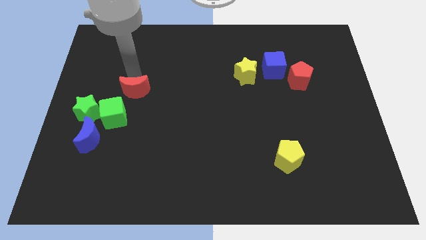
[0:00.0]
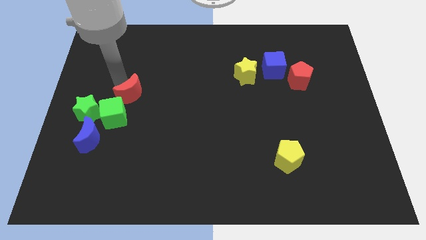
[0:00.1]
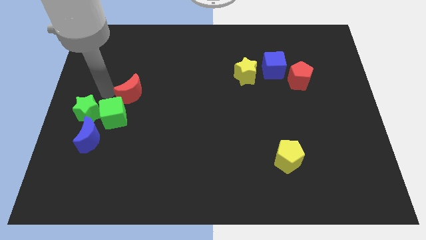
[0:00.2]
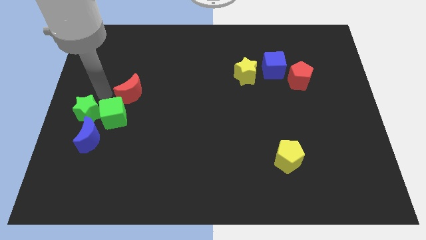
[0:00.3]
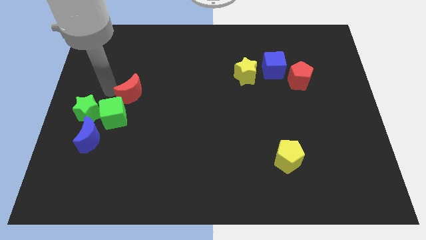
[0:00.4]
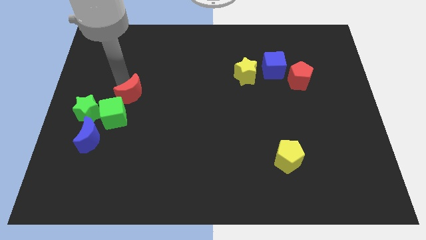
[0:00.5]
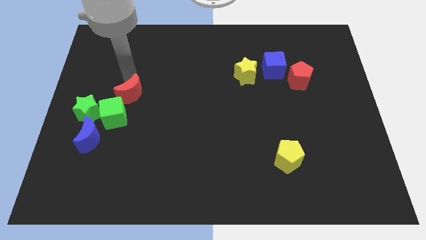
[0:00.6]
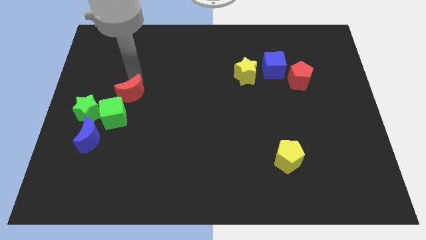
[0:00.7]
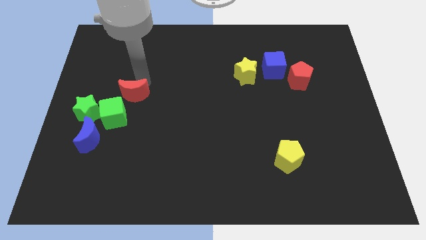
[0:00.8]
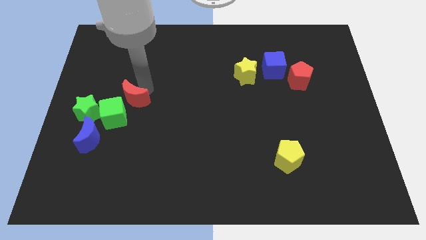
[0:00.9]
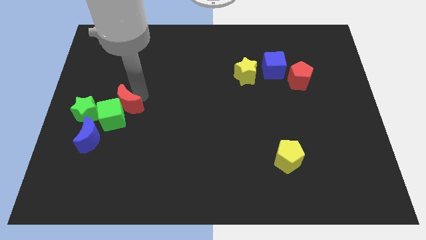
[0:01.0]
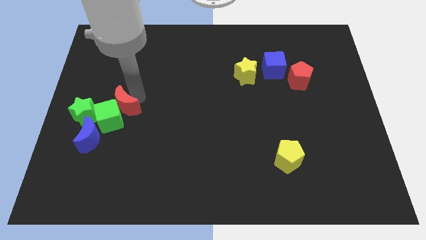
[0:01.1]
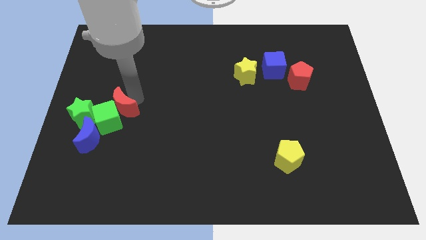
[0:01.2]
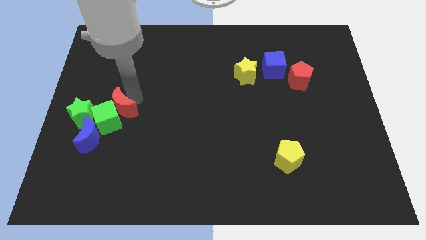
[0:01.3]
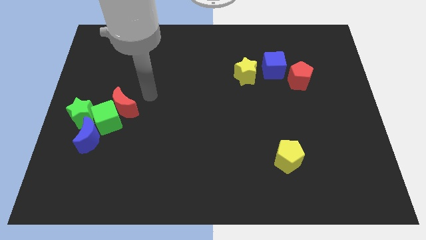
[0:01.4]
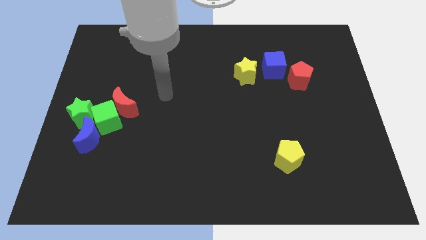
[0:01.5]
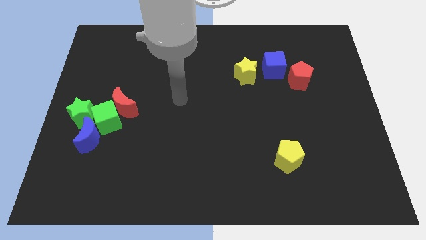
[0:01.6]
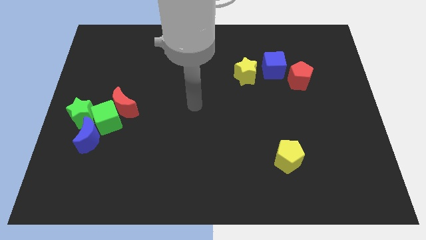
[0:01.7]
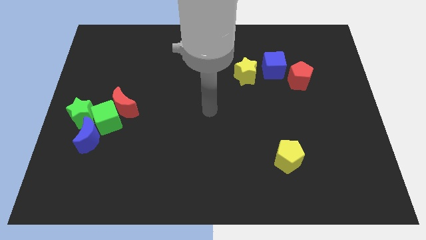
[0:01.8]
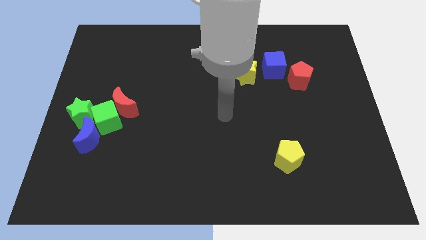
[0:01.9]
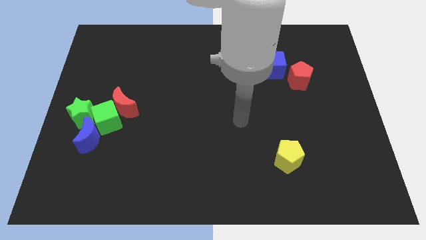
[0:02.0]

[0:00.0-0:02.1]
place the red moon close to the green cube

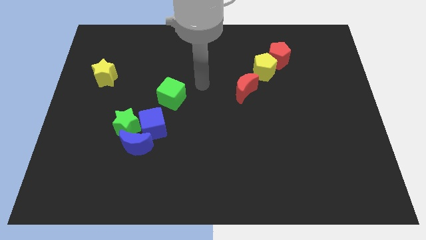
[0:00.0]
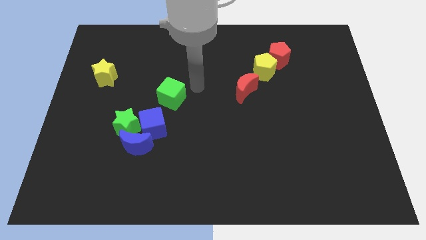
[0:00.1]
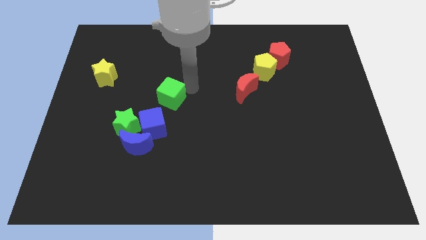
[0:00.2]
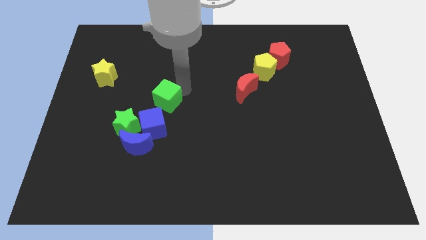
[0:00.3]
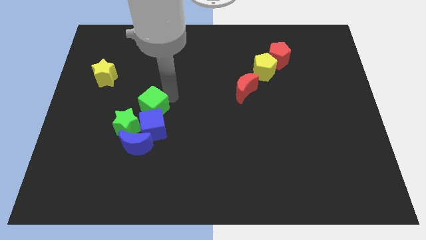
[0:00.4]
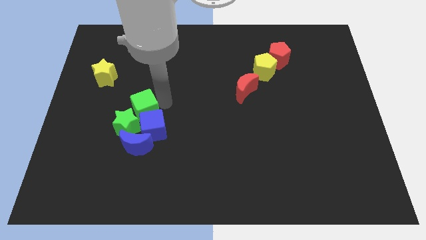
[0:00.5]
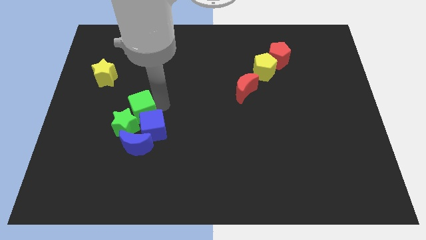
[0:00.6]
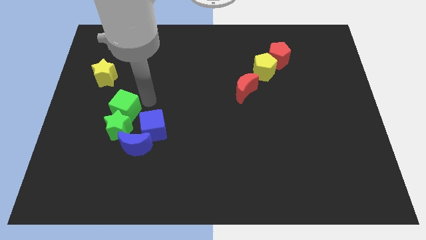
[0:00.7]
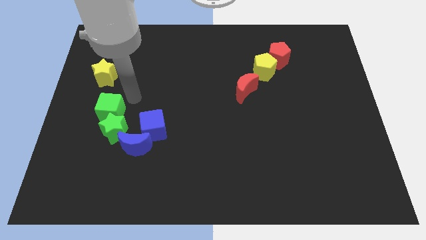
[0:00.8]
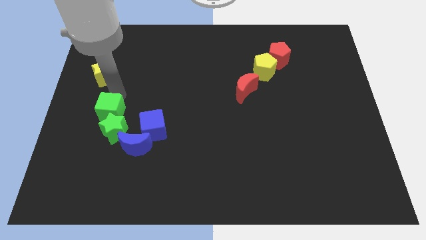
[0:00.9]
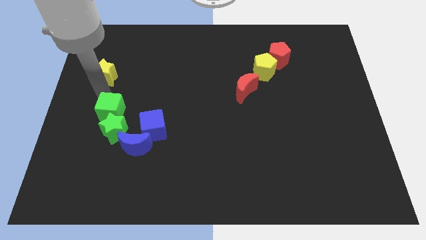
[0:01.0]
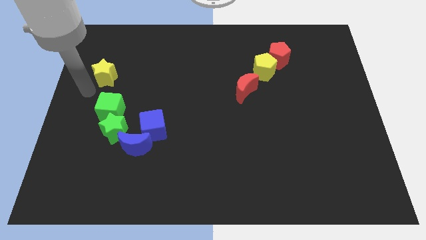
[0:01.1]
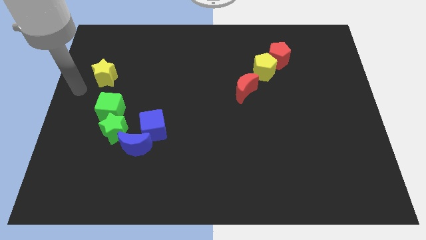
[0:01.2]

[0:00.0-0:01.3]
place the green cube above the green star

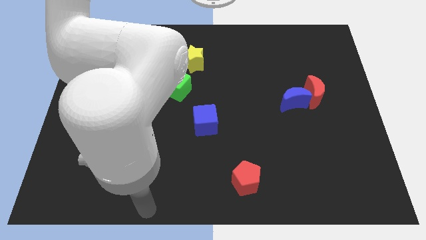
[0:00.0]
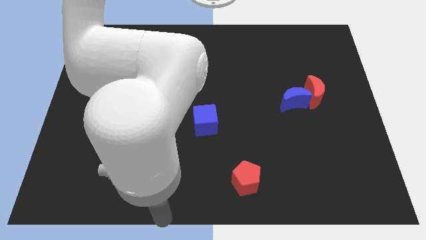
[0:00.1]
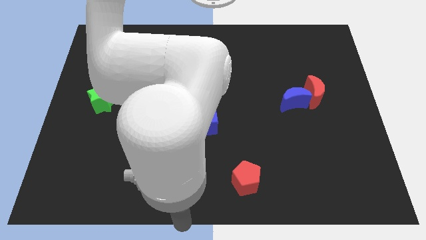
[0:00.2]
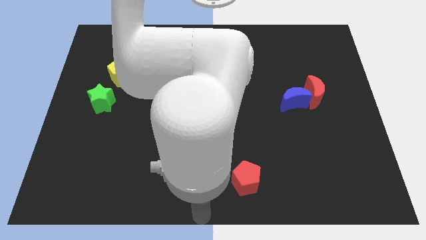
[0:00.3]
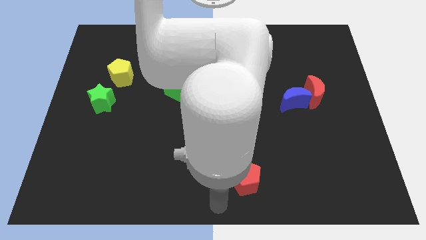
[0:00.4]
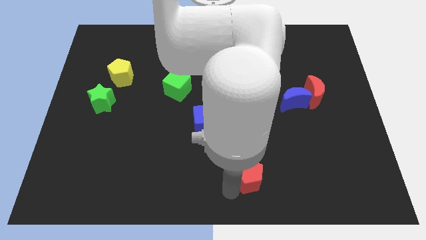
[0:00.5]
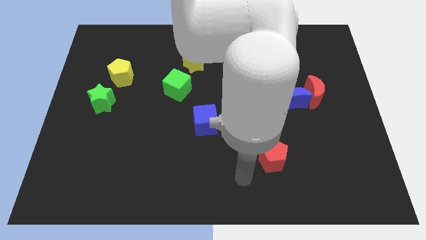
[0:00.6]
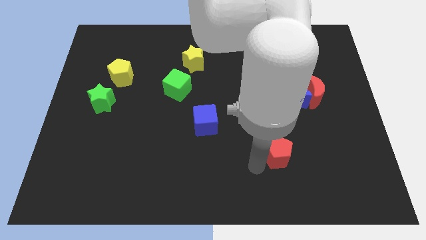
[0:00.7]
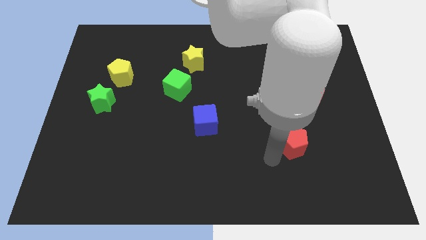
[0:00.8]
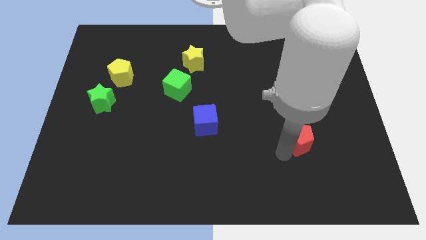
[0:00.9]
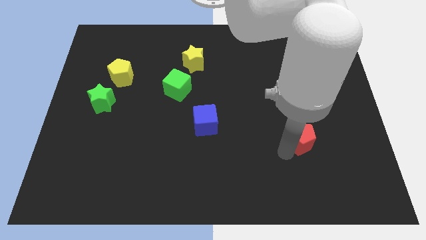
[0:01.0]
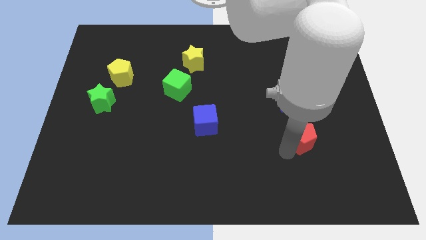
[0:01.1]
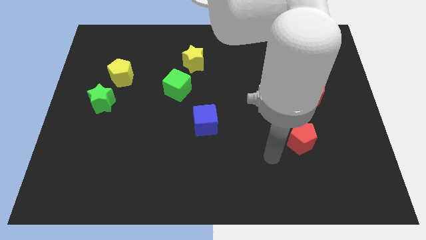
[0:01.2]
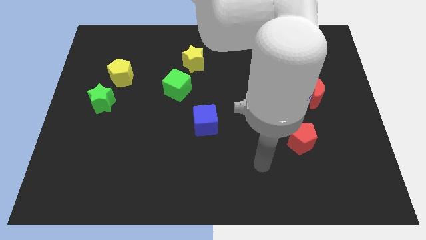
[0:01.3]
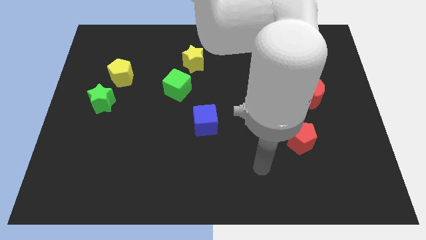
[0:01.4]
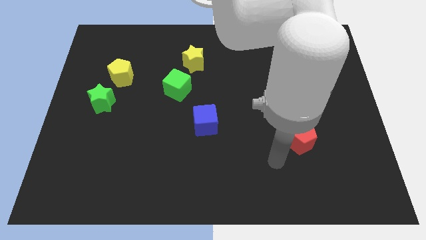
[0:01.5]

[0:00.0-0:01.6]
put the red pentagon to the bottom side of the blue moon

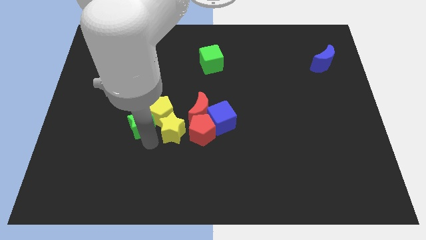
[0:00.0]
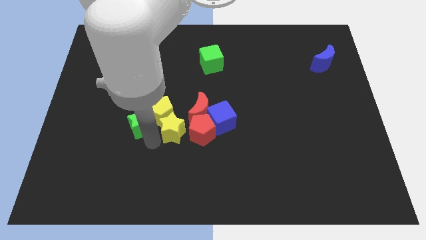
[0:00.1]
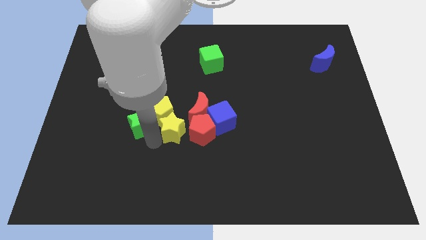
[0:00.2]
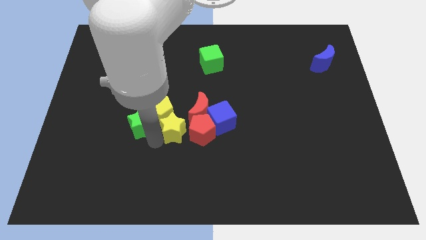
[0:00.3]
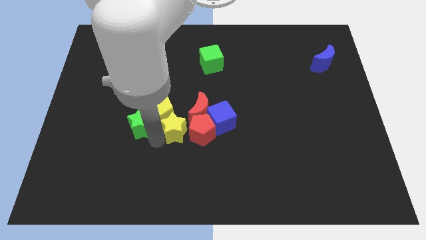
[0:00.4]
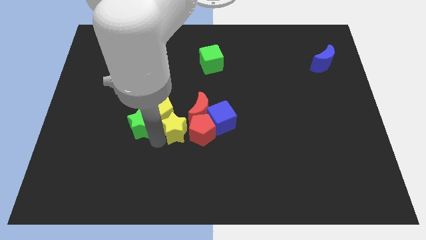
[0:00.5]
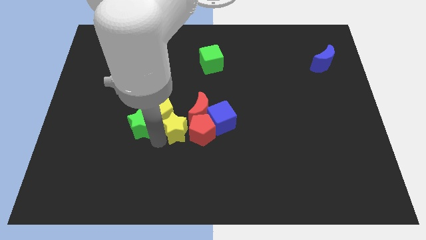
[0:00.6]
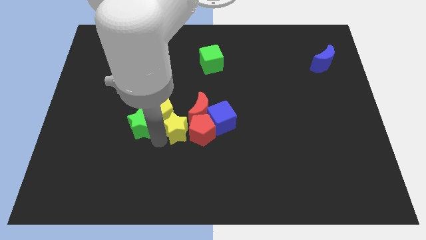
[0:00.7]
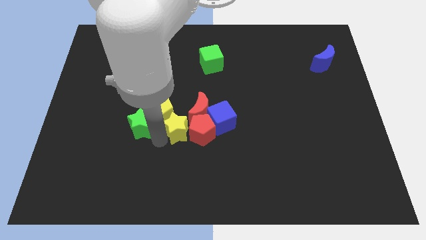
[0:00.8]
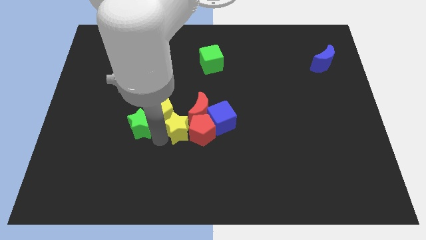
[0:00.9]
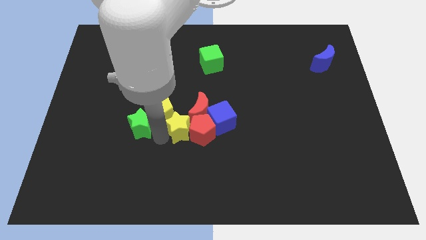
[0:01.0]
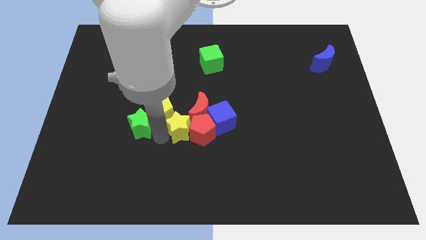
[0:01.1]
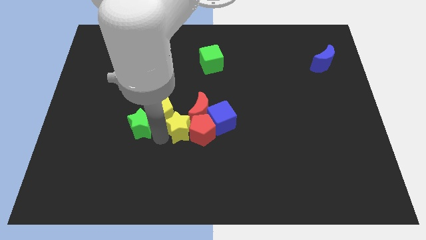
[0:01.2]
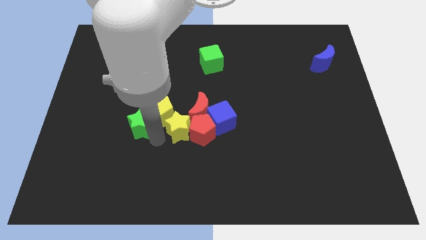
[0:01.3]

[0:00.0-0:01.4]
push the yellow star into red pentagon

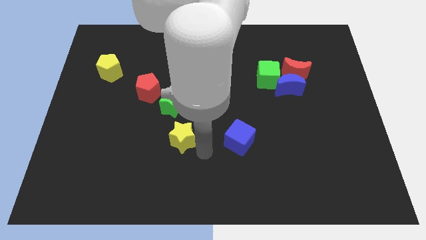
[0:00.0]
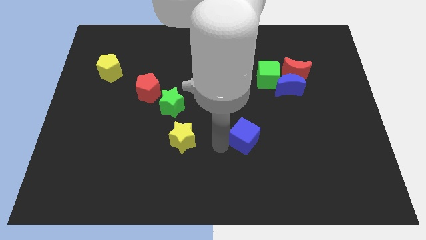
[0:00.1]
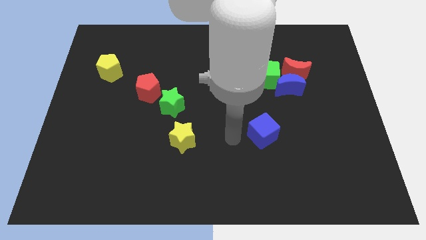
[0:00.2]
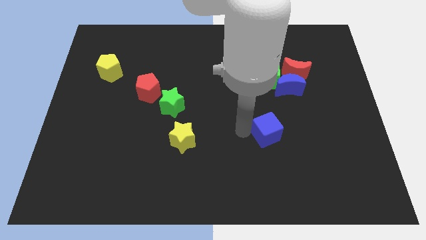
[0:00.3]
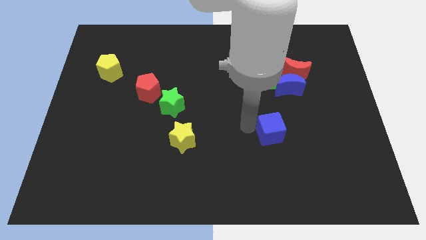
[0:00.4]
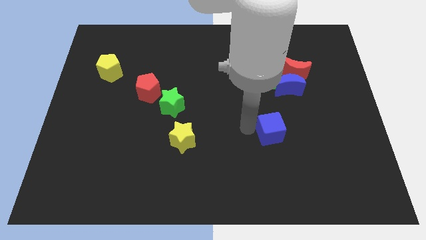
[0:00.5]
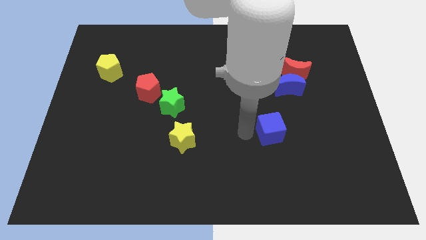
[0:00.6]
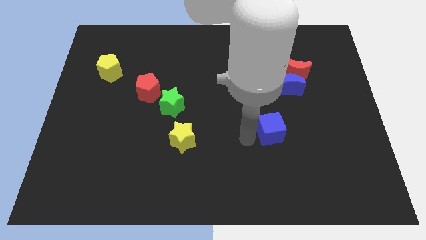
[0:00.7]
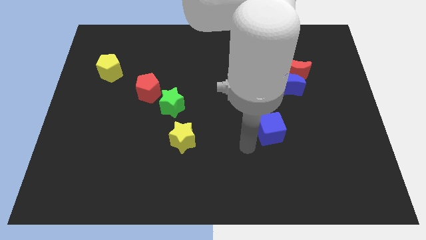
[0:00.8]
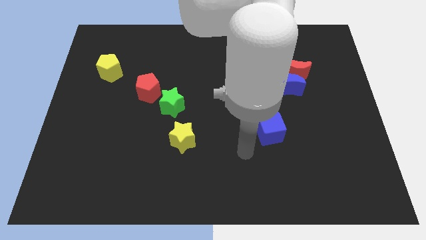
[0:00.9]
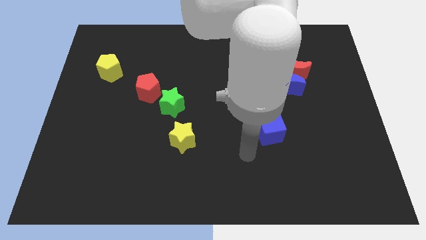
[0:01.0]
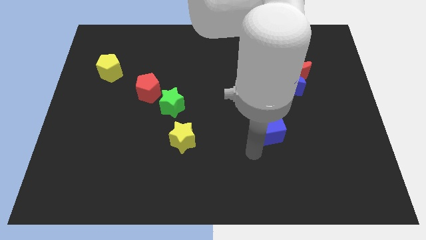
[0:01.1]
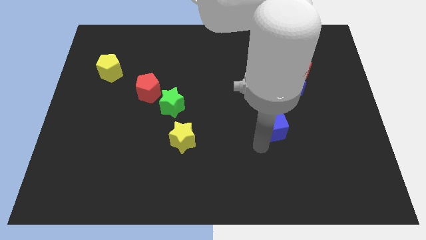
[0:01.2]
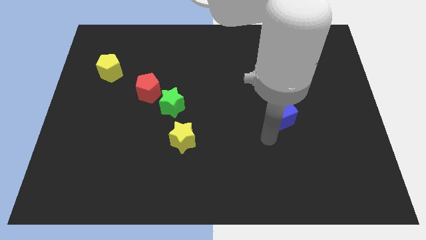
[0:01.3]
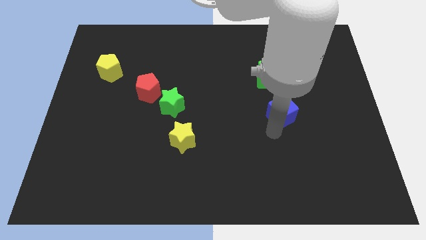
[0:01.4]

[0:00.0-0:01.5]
put the blue cube below the blue crescent

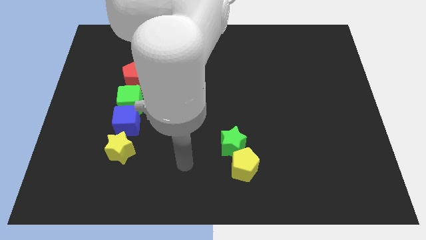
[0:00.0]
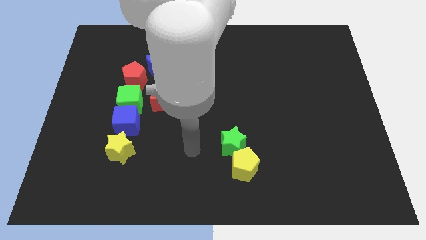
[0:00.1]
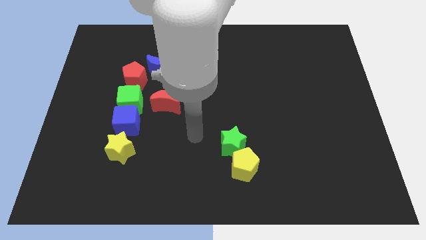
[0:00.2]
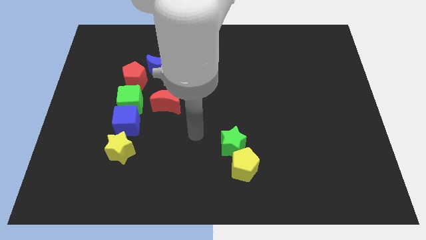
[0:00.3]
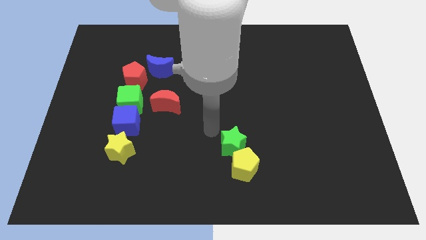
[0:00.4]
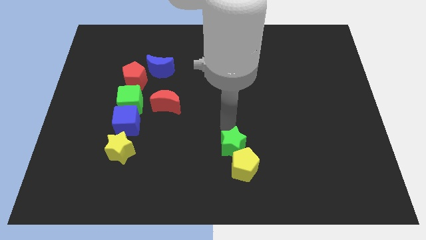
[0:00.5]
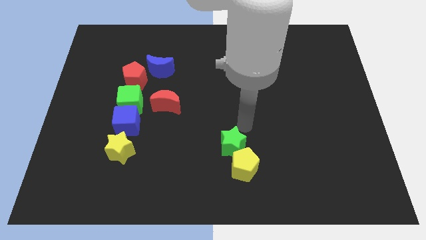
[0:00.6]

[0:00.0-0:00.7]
move your arm above the green star

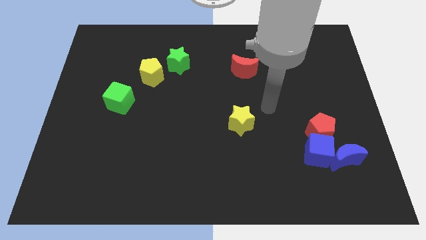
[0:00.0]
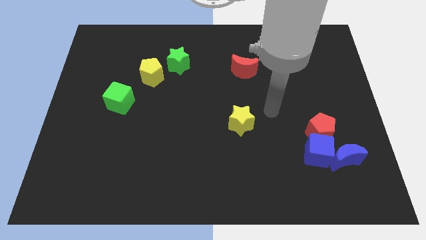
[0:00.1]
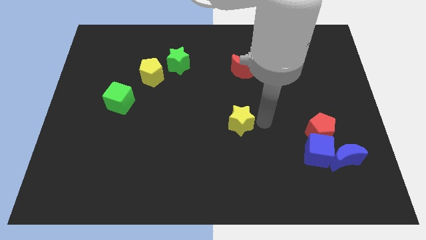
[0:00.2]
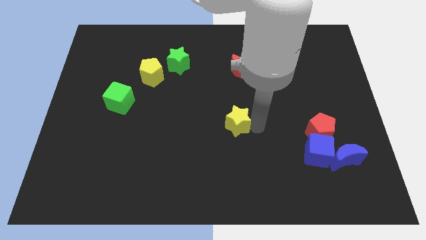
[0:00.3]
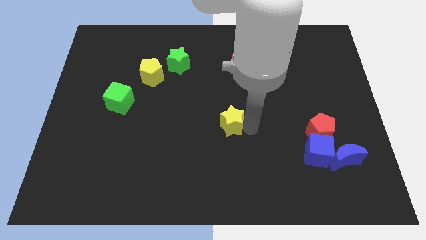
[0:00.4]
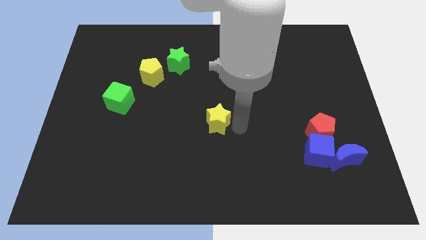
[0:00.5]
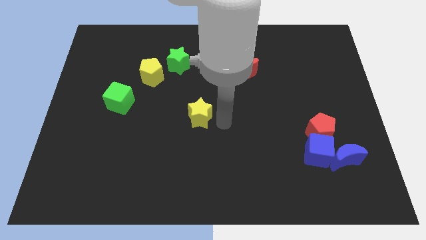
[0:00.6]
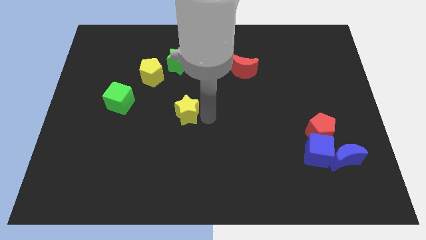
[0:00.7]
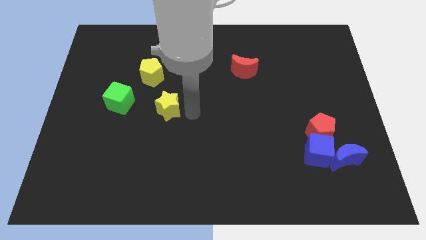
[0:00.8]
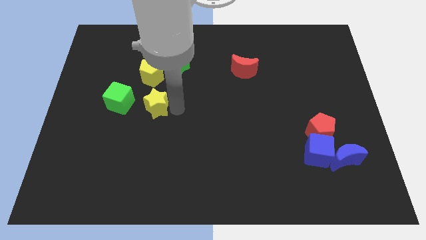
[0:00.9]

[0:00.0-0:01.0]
place the yellow star below the yellow pentagon
